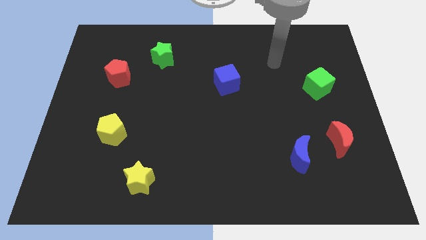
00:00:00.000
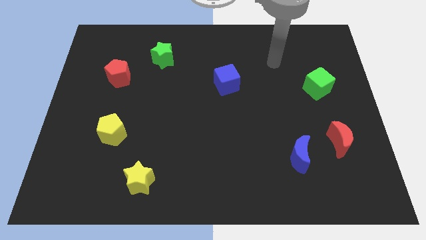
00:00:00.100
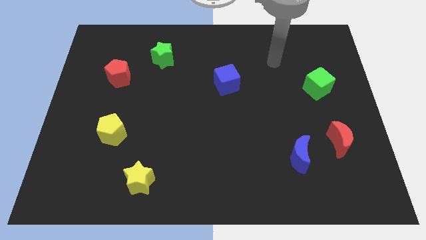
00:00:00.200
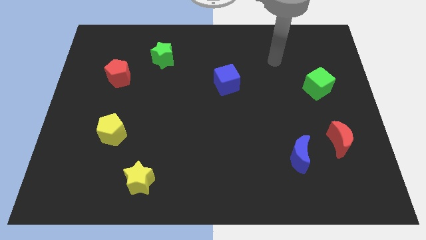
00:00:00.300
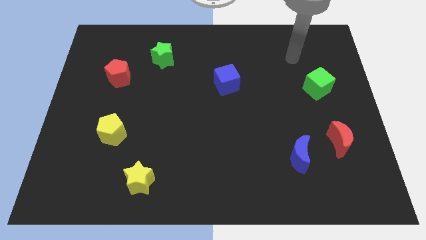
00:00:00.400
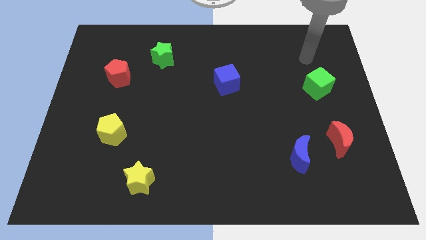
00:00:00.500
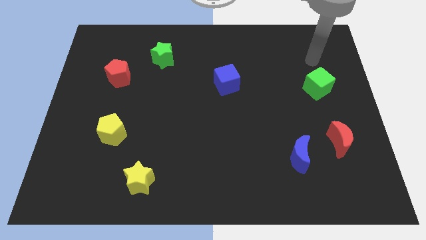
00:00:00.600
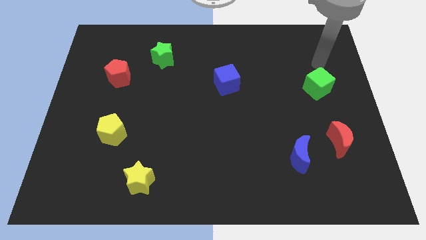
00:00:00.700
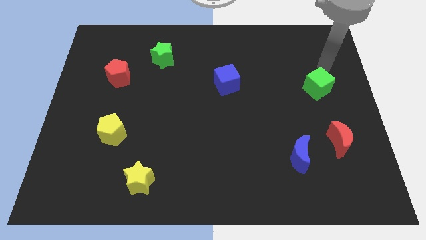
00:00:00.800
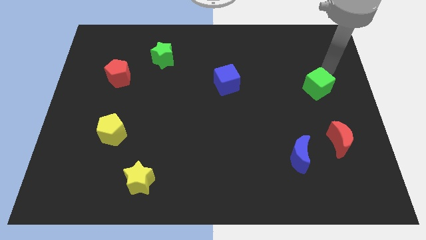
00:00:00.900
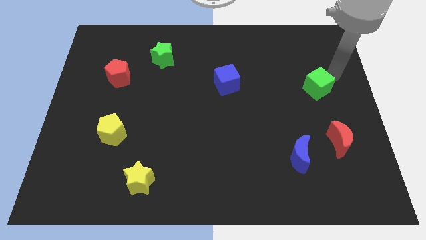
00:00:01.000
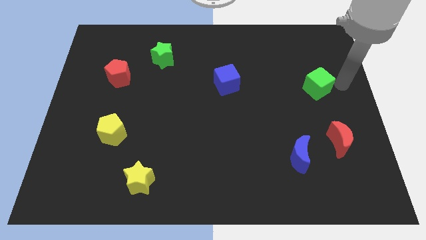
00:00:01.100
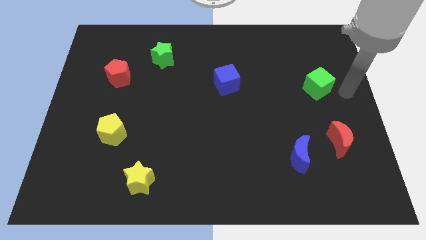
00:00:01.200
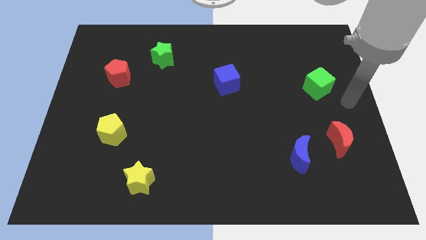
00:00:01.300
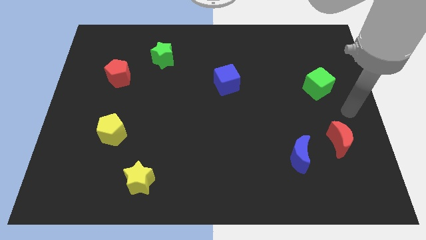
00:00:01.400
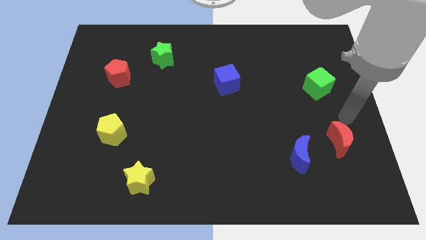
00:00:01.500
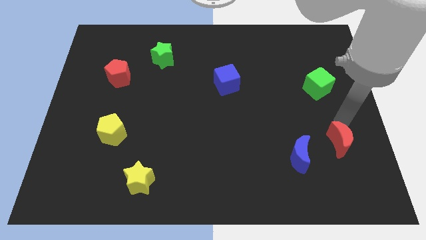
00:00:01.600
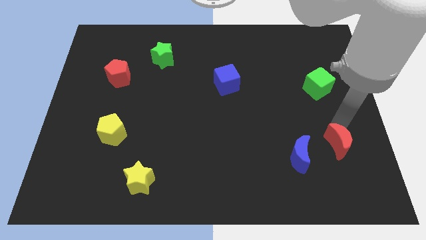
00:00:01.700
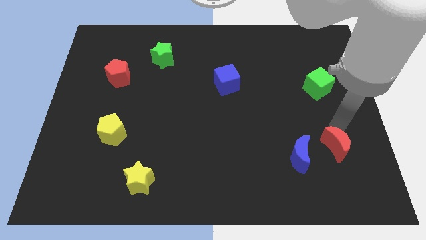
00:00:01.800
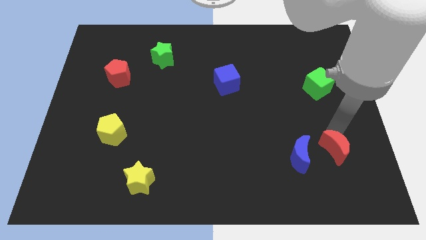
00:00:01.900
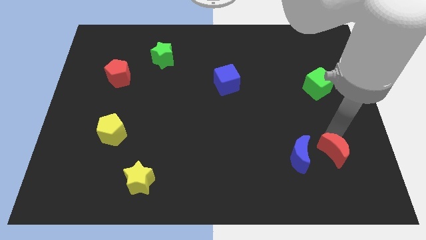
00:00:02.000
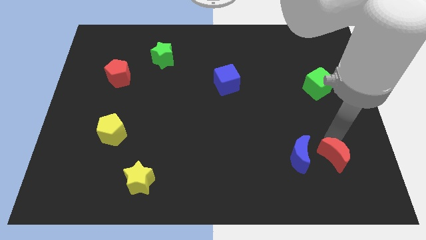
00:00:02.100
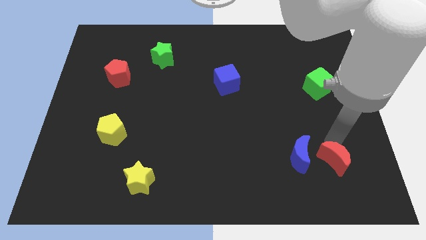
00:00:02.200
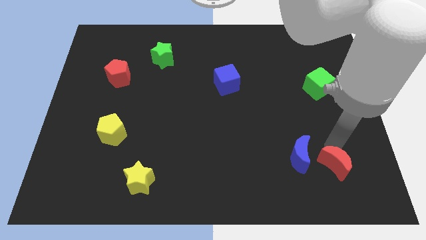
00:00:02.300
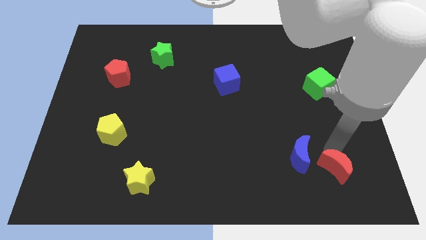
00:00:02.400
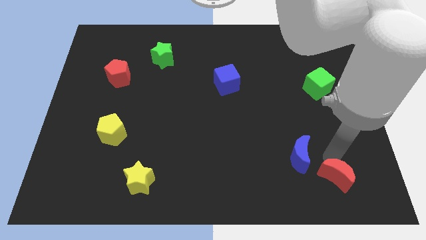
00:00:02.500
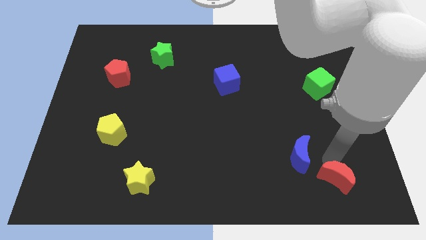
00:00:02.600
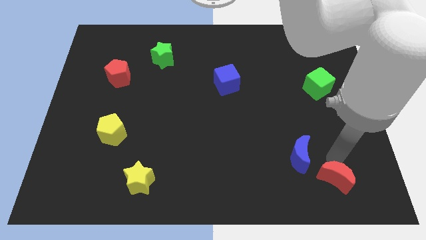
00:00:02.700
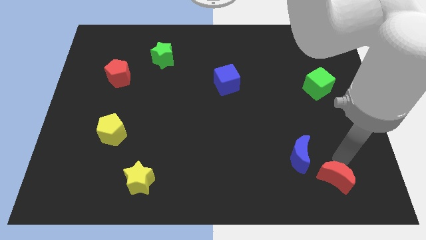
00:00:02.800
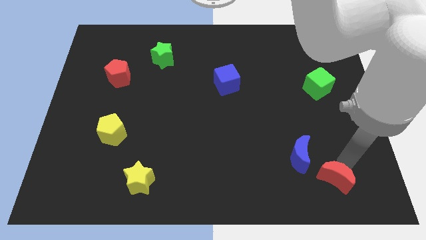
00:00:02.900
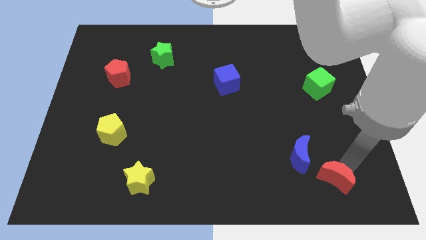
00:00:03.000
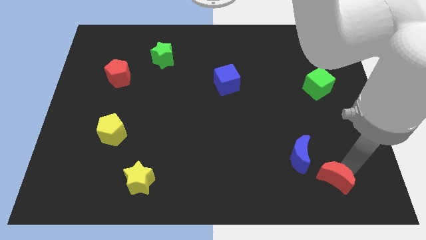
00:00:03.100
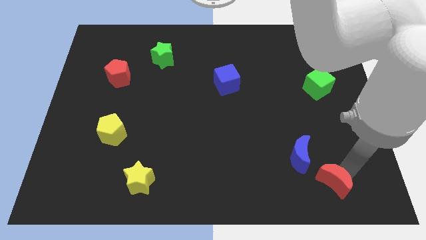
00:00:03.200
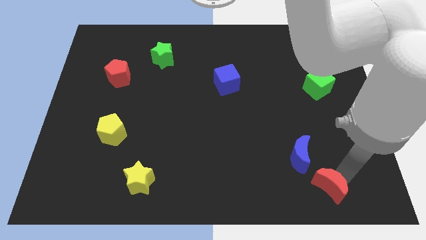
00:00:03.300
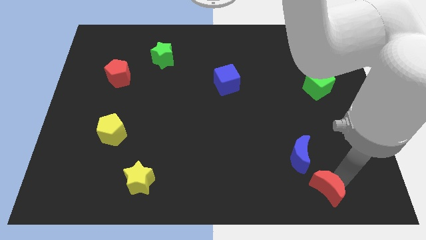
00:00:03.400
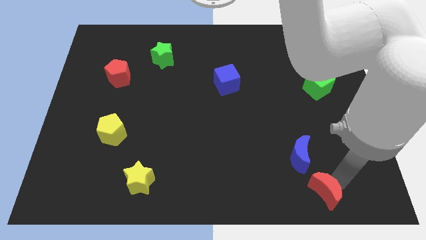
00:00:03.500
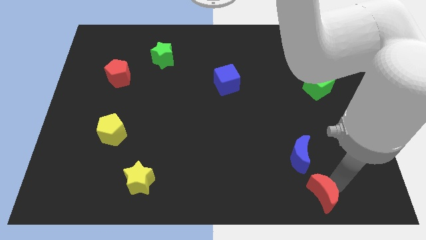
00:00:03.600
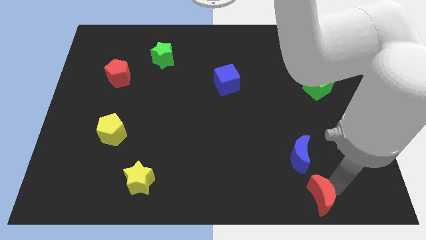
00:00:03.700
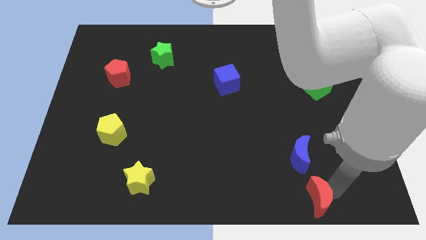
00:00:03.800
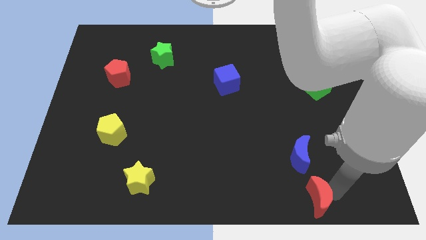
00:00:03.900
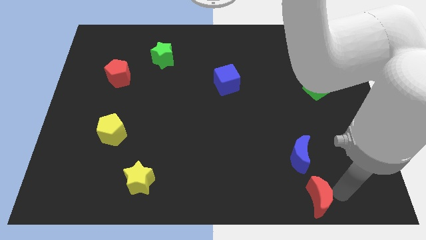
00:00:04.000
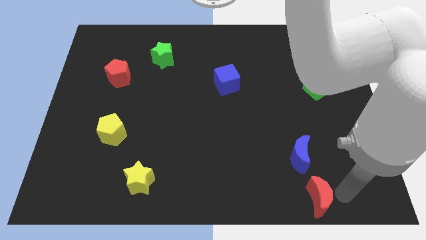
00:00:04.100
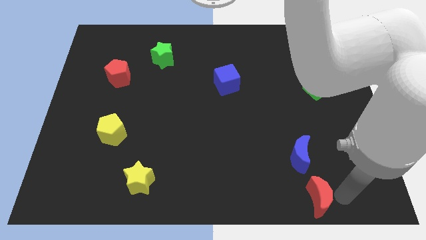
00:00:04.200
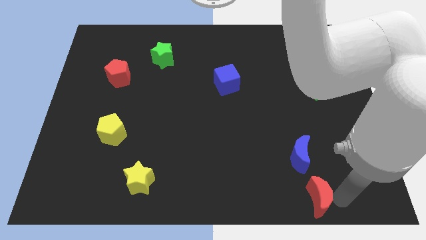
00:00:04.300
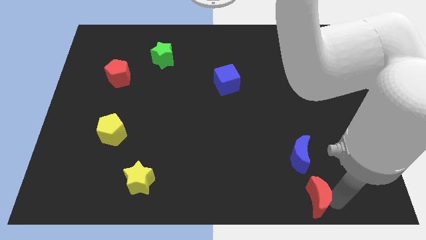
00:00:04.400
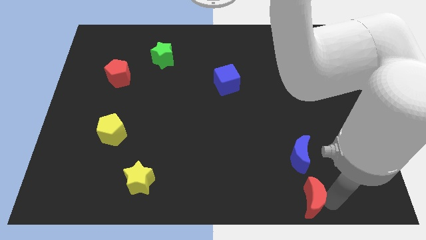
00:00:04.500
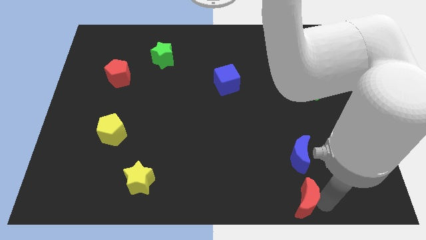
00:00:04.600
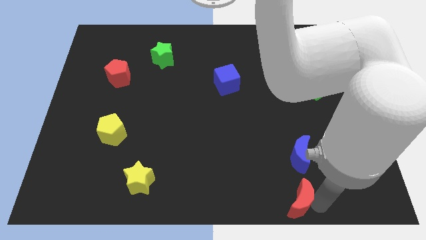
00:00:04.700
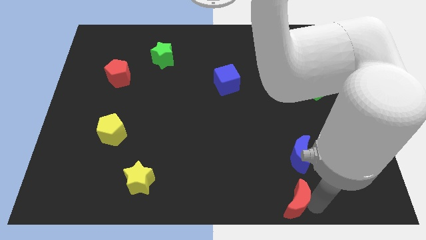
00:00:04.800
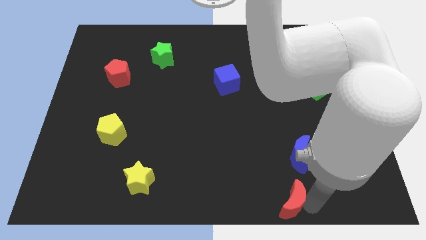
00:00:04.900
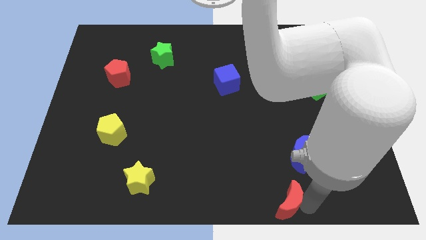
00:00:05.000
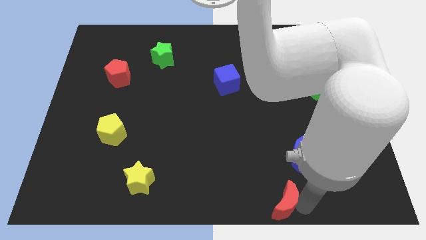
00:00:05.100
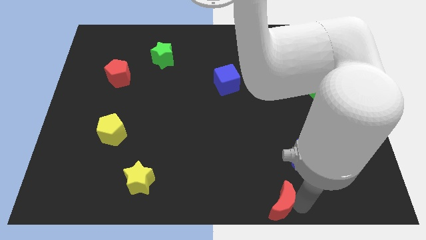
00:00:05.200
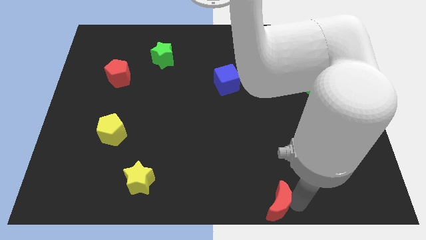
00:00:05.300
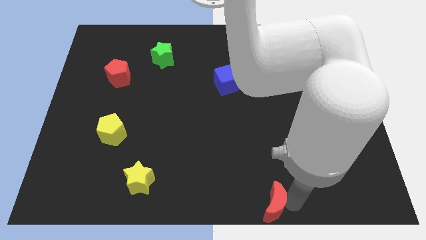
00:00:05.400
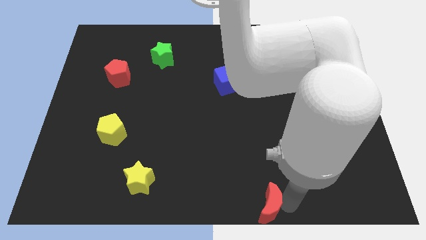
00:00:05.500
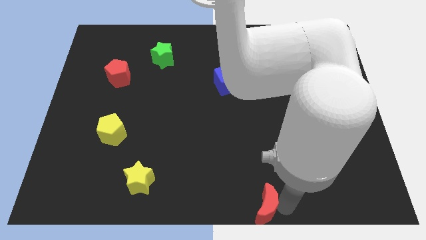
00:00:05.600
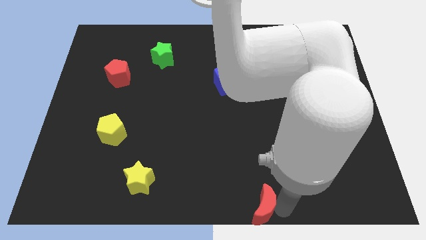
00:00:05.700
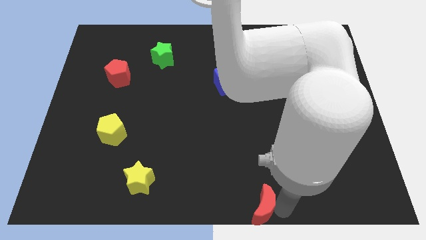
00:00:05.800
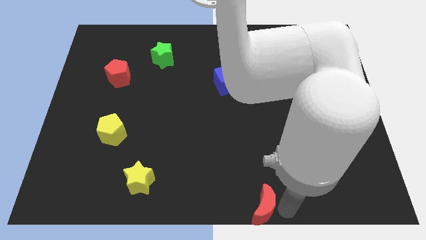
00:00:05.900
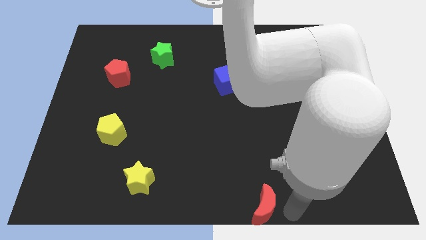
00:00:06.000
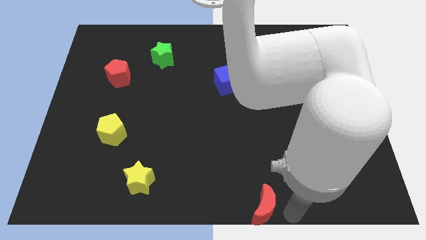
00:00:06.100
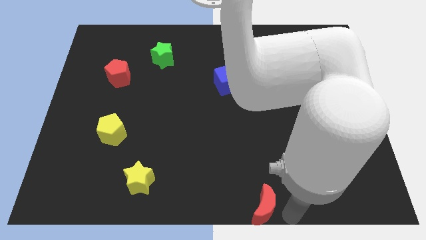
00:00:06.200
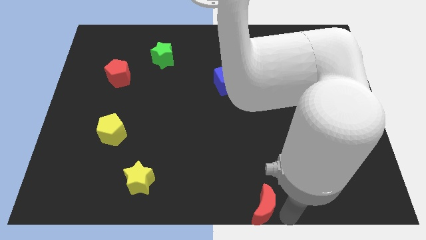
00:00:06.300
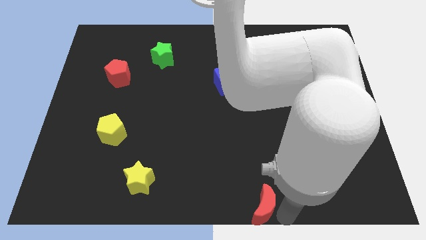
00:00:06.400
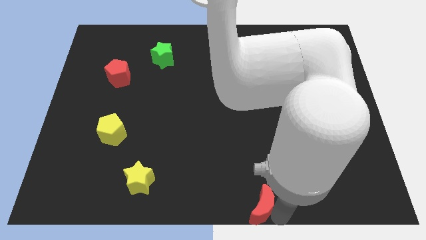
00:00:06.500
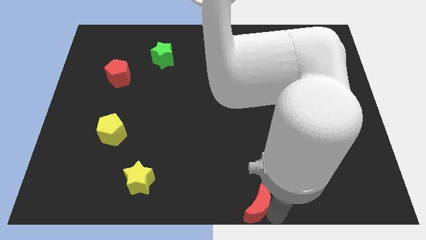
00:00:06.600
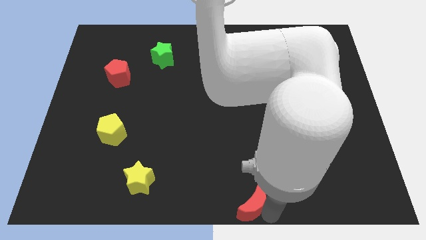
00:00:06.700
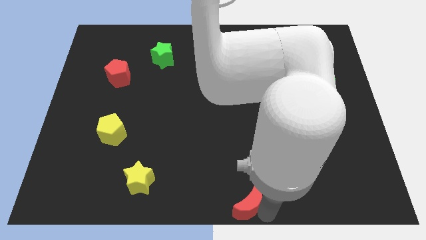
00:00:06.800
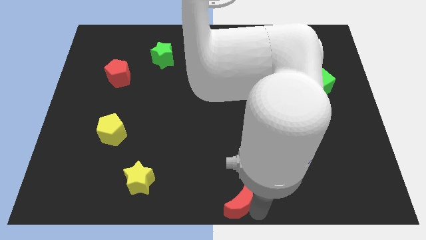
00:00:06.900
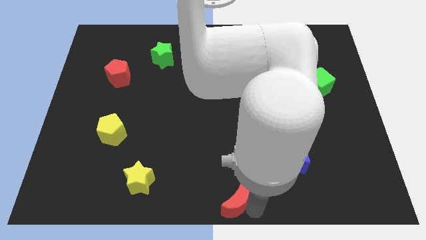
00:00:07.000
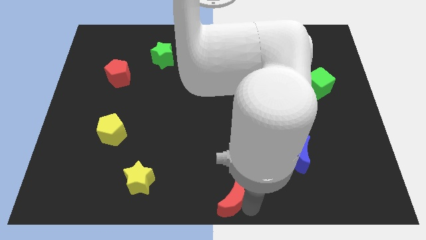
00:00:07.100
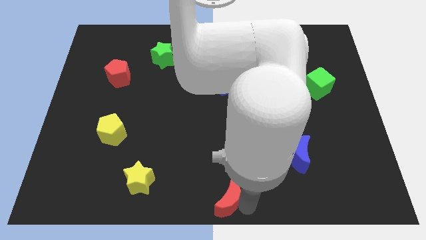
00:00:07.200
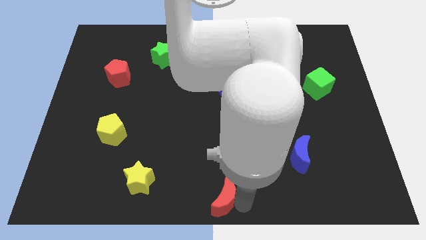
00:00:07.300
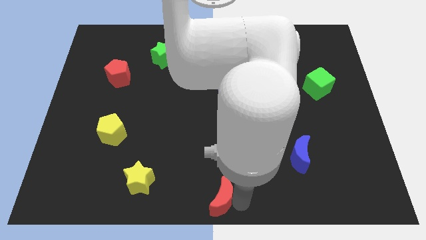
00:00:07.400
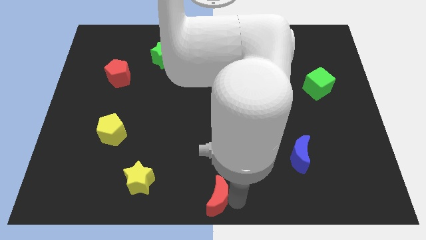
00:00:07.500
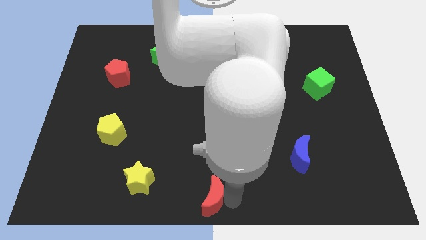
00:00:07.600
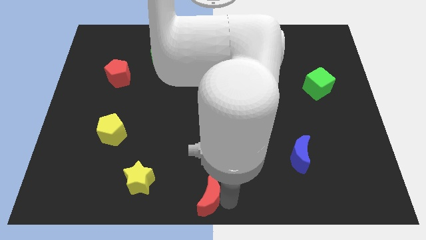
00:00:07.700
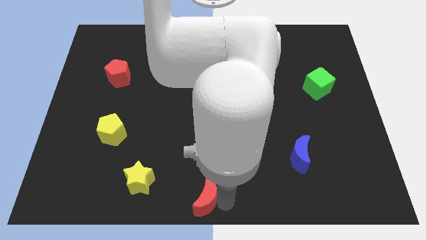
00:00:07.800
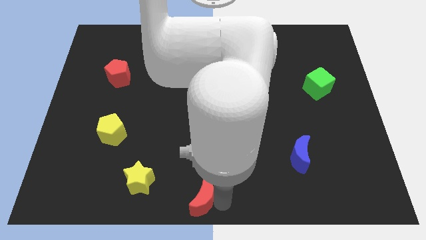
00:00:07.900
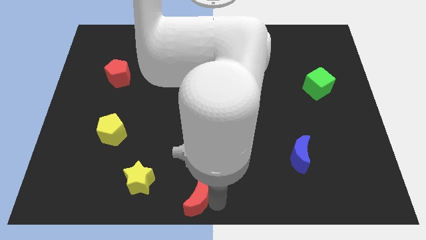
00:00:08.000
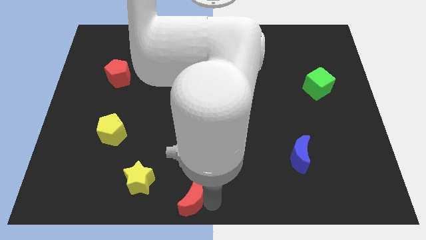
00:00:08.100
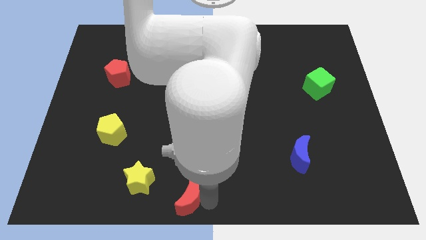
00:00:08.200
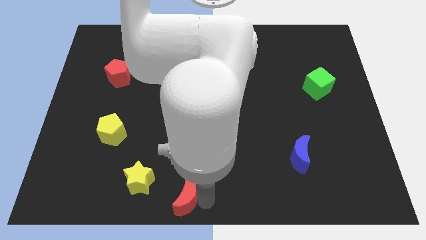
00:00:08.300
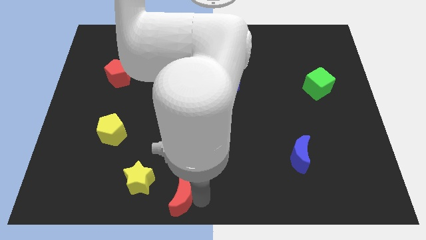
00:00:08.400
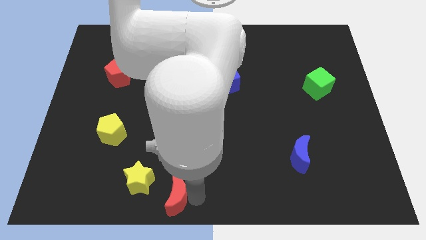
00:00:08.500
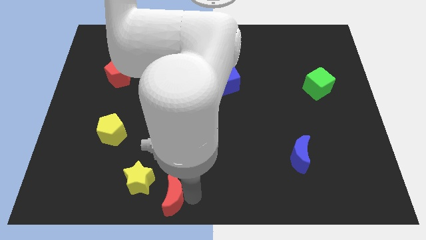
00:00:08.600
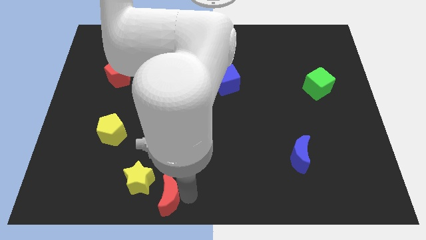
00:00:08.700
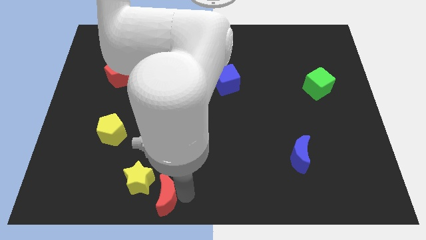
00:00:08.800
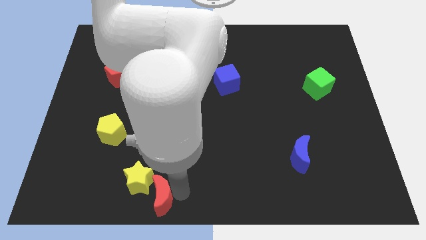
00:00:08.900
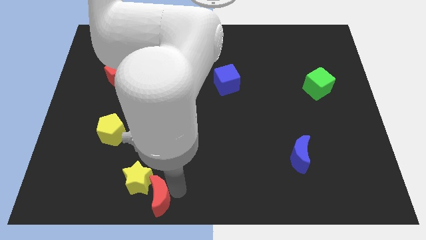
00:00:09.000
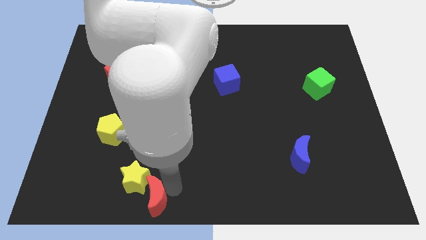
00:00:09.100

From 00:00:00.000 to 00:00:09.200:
move the red moon to the yellow star
